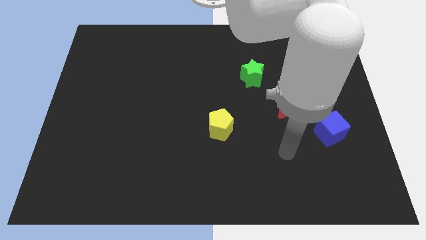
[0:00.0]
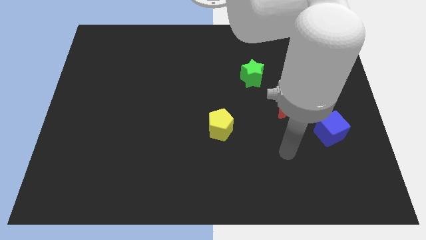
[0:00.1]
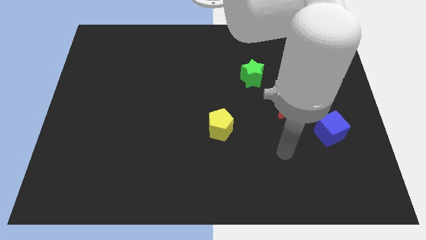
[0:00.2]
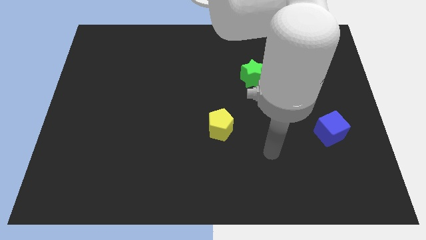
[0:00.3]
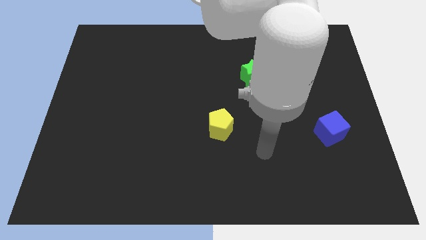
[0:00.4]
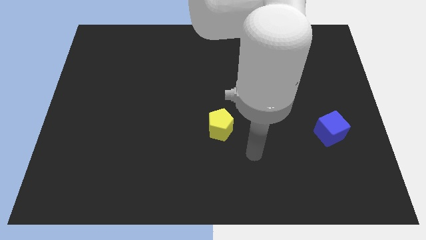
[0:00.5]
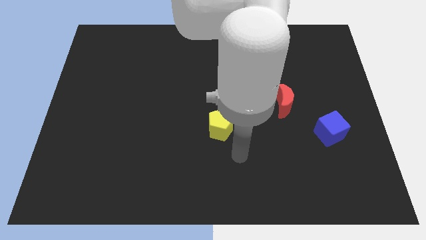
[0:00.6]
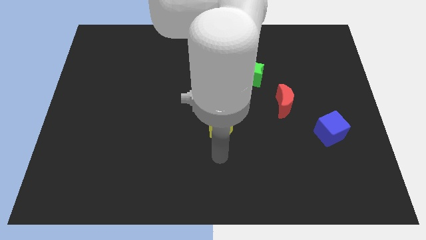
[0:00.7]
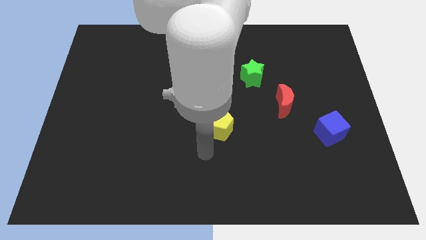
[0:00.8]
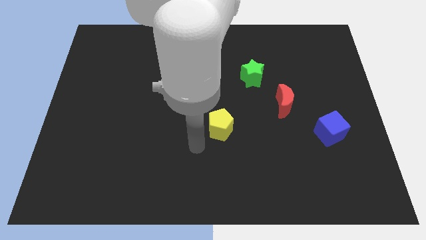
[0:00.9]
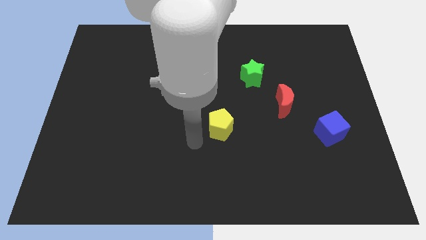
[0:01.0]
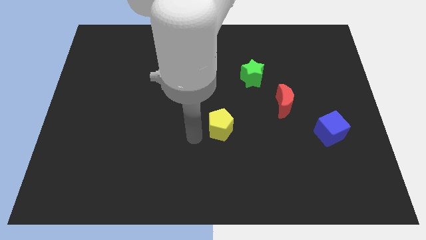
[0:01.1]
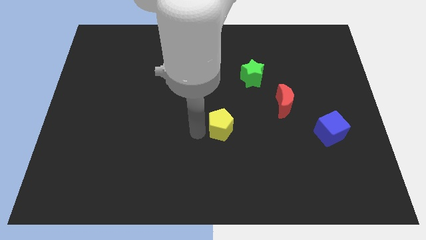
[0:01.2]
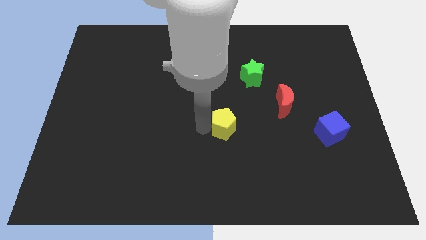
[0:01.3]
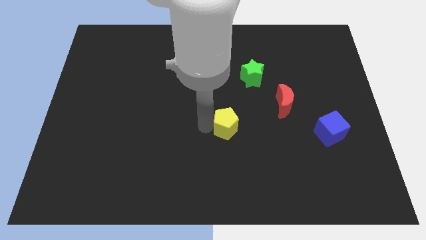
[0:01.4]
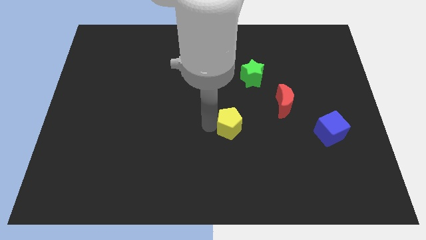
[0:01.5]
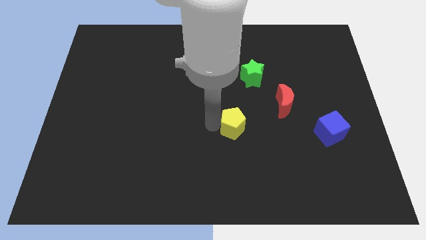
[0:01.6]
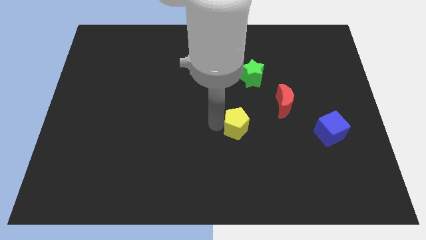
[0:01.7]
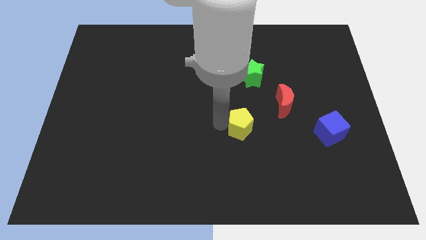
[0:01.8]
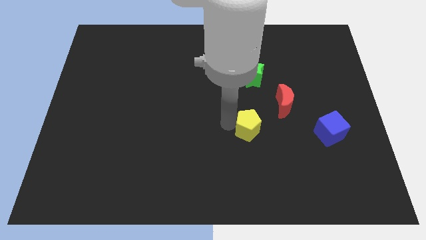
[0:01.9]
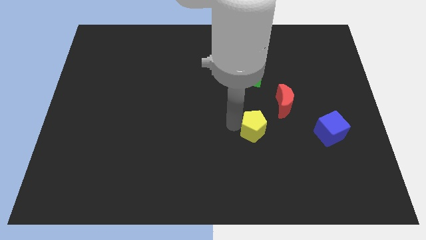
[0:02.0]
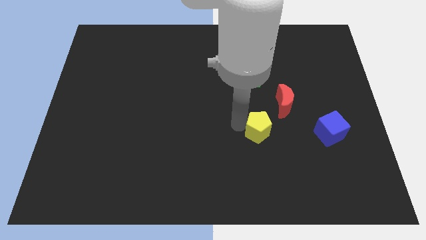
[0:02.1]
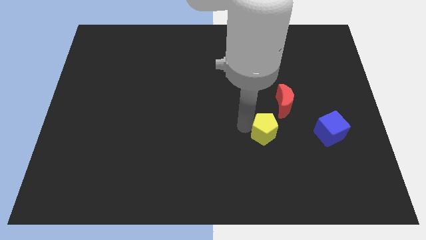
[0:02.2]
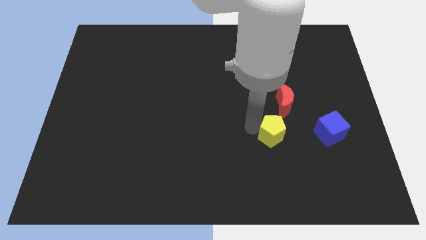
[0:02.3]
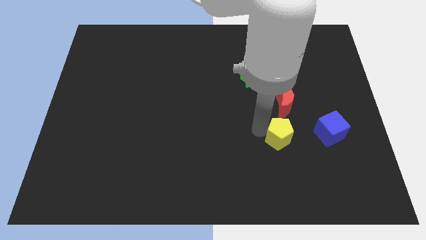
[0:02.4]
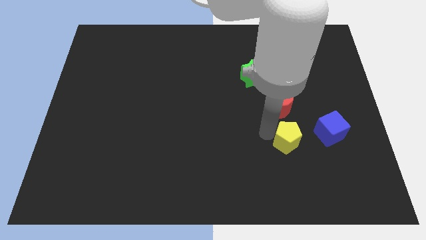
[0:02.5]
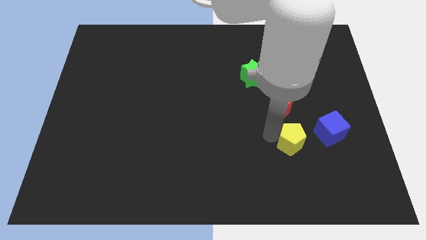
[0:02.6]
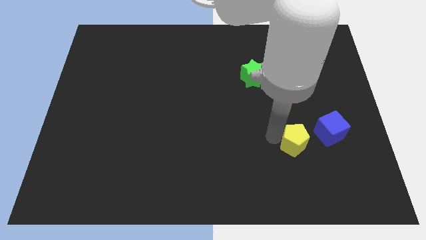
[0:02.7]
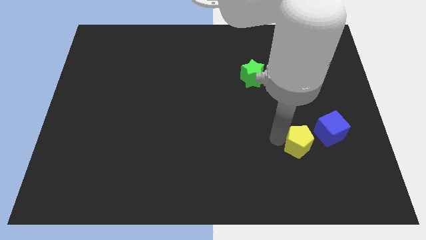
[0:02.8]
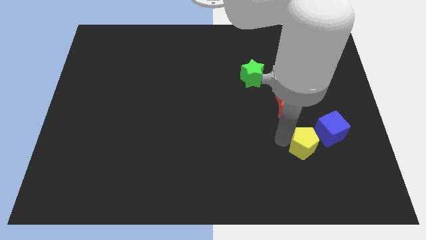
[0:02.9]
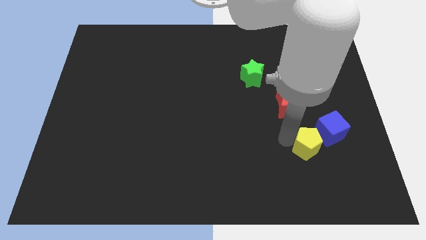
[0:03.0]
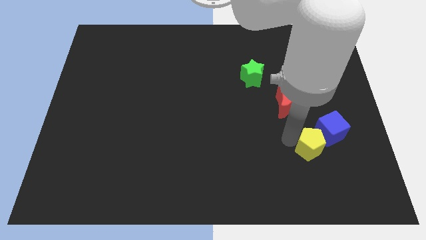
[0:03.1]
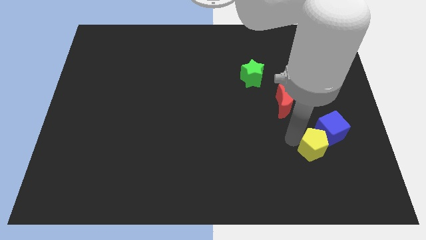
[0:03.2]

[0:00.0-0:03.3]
move the pentagon to the blue cube

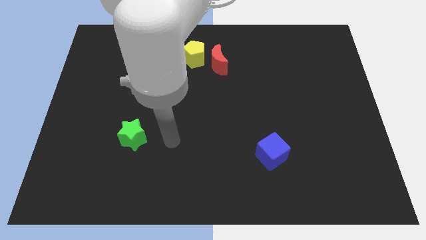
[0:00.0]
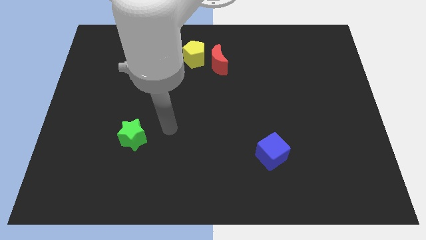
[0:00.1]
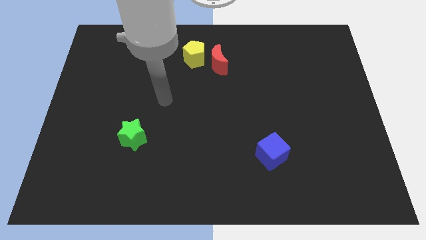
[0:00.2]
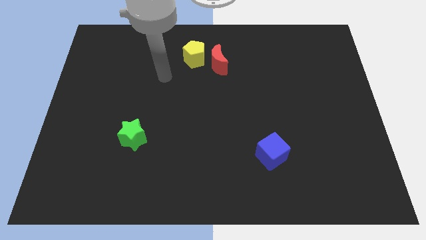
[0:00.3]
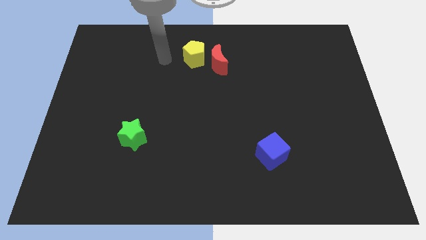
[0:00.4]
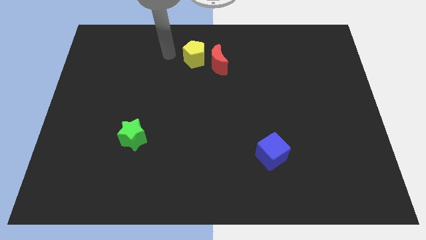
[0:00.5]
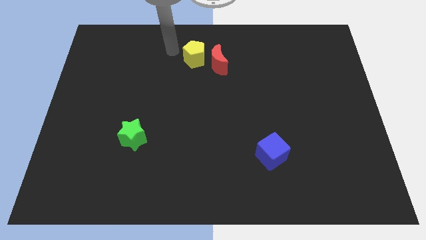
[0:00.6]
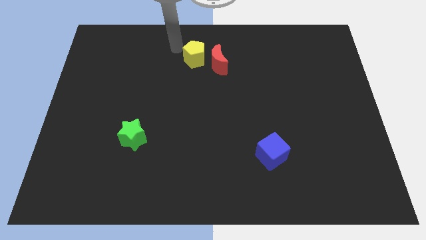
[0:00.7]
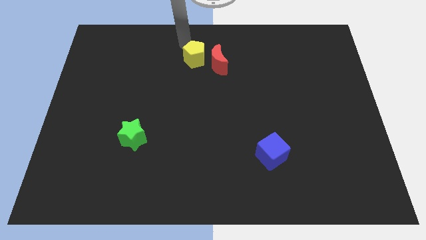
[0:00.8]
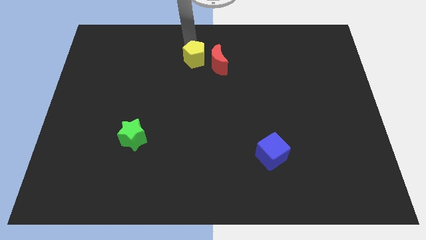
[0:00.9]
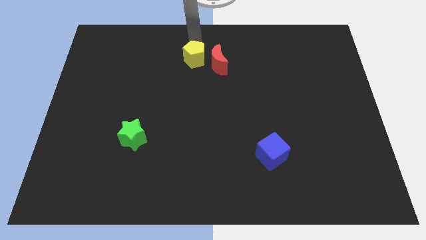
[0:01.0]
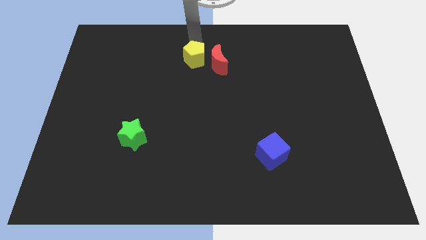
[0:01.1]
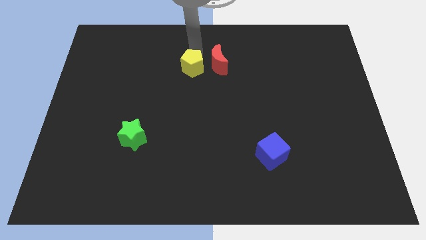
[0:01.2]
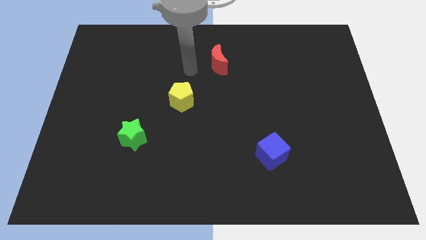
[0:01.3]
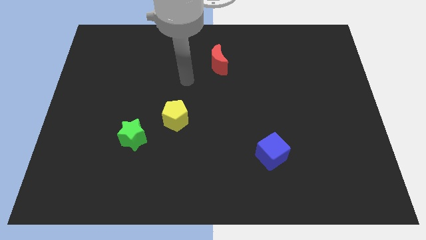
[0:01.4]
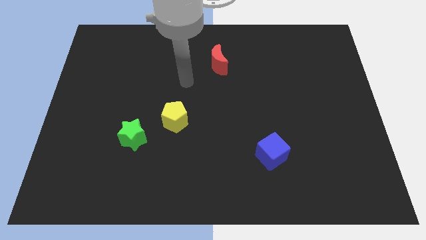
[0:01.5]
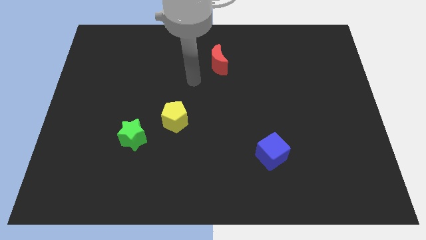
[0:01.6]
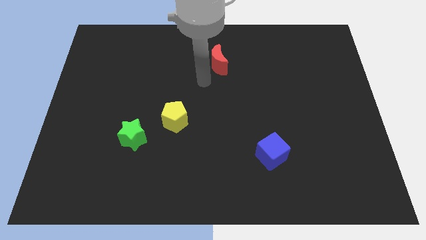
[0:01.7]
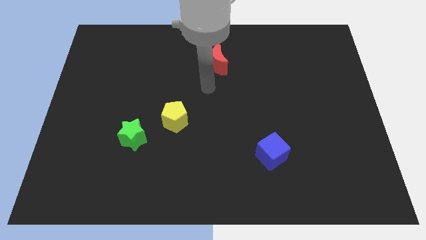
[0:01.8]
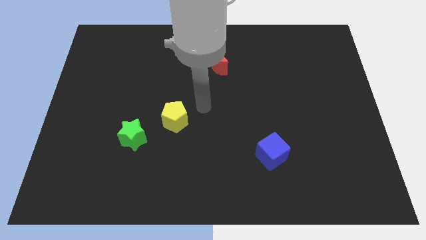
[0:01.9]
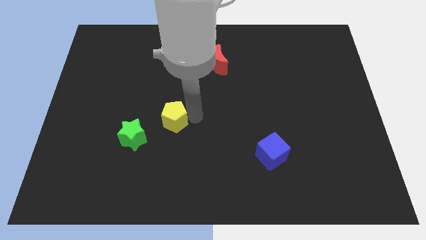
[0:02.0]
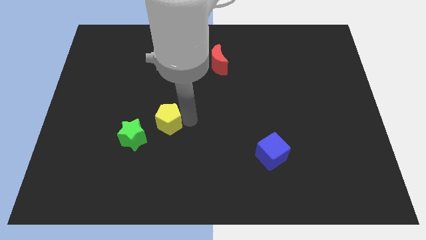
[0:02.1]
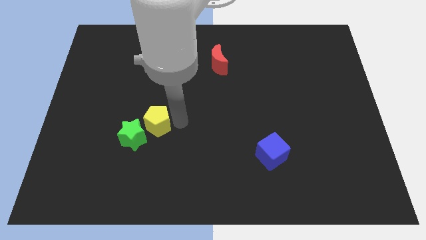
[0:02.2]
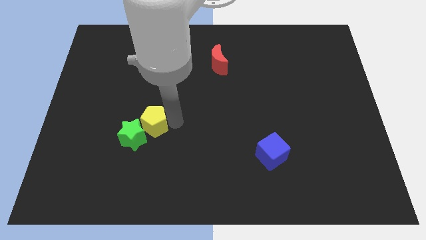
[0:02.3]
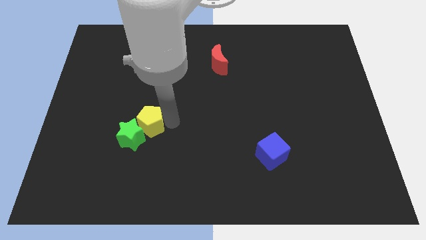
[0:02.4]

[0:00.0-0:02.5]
move the yellow pentagon to the green star

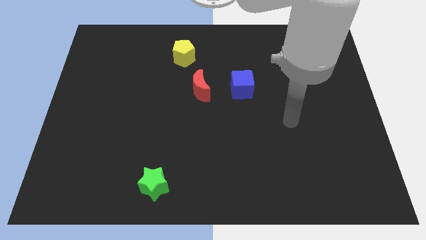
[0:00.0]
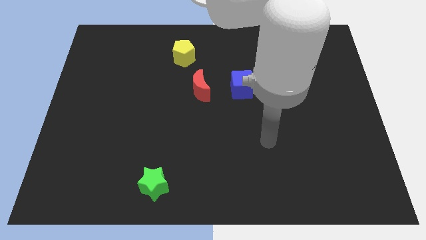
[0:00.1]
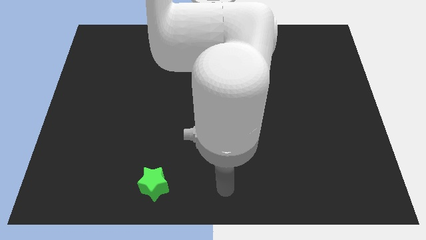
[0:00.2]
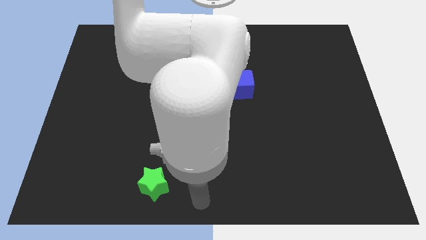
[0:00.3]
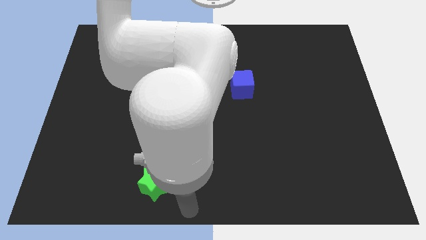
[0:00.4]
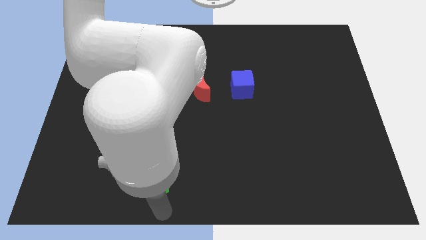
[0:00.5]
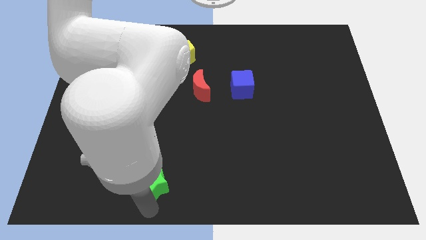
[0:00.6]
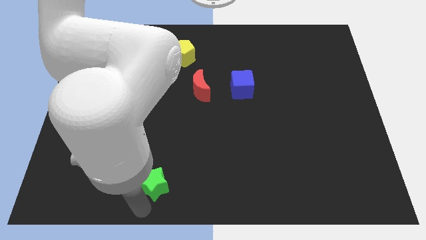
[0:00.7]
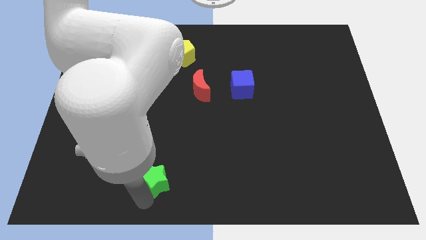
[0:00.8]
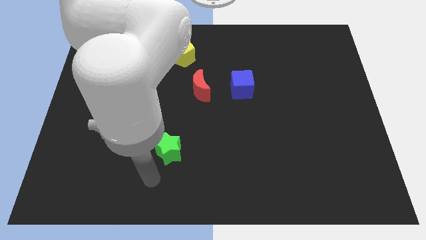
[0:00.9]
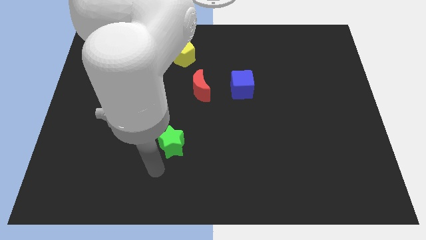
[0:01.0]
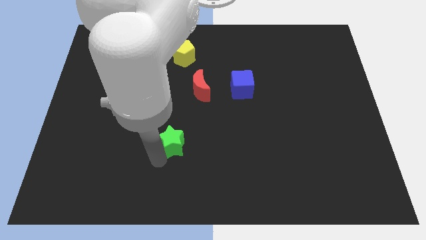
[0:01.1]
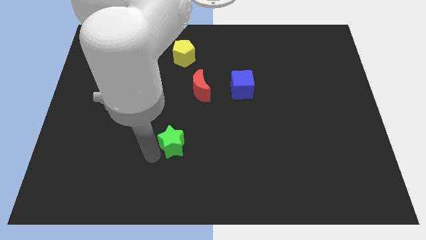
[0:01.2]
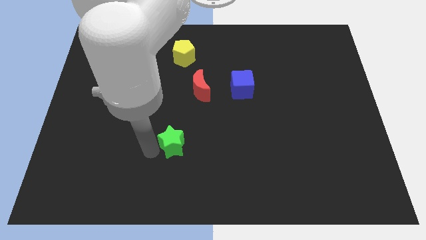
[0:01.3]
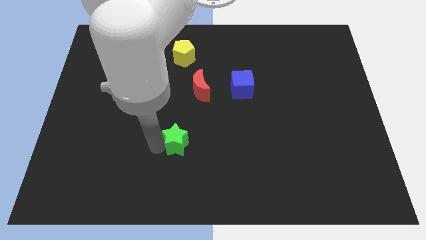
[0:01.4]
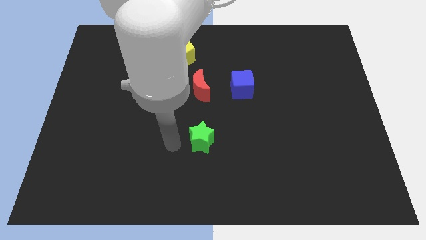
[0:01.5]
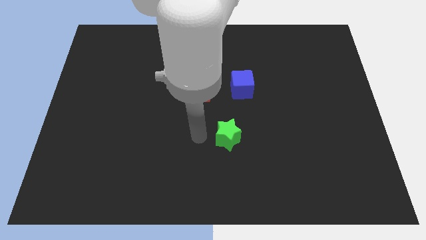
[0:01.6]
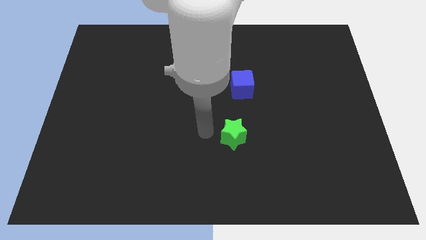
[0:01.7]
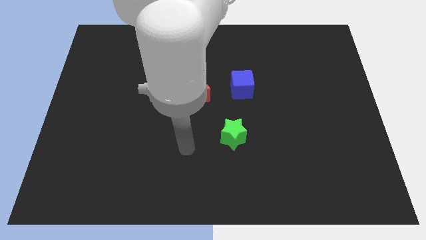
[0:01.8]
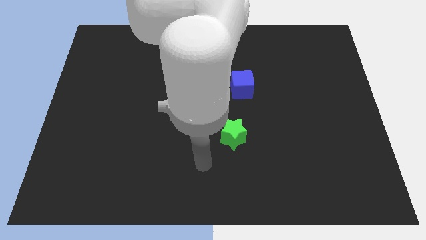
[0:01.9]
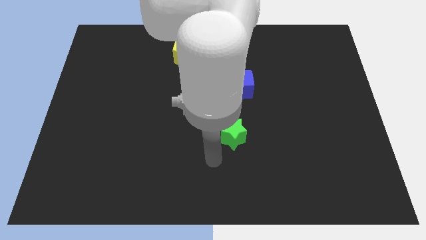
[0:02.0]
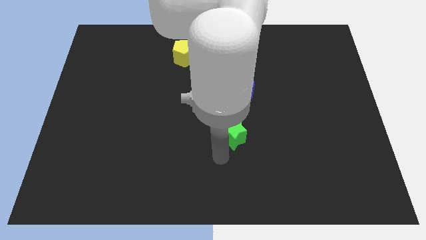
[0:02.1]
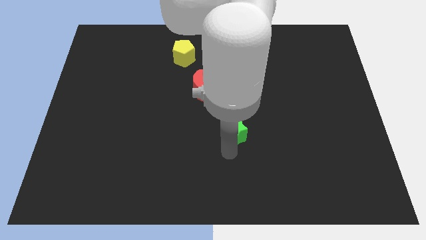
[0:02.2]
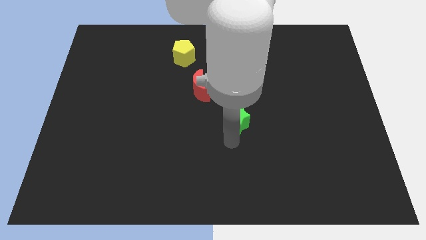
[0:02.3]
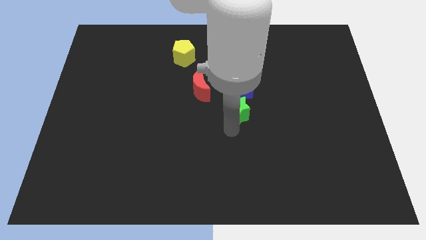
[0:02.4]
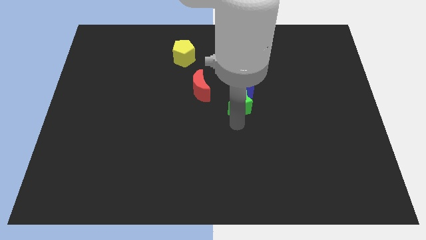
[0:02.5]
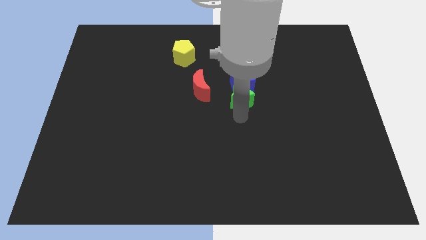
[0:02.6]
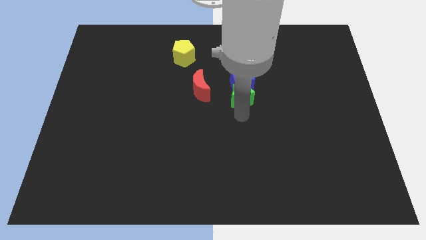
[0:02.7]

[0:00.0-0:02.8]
put the green star towards the blue block

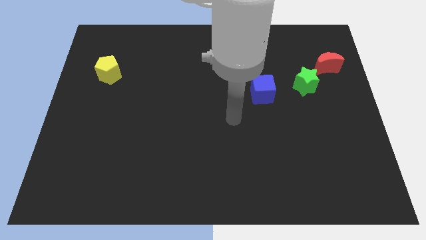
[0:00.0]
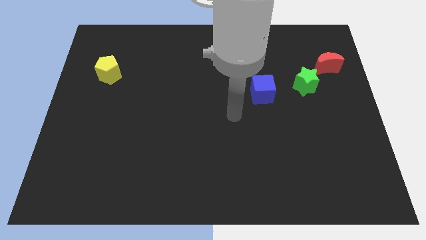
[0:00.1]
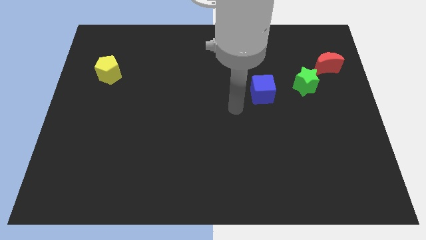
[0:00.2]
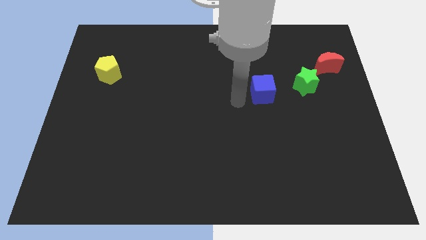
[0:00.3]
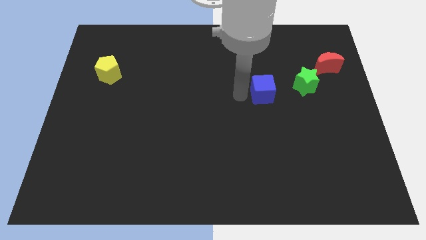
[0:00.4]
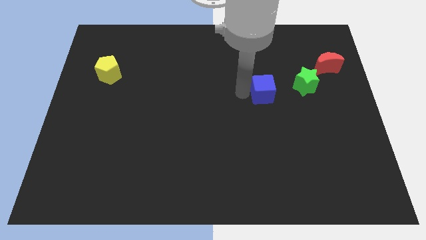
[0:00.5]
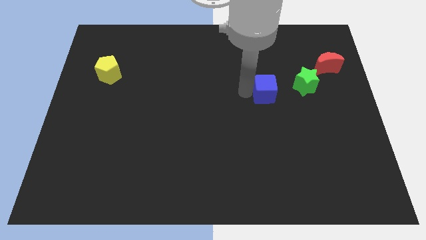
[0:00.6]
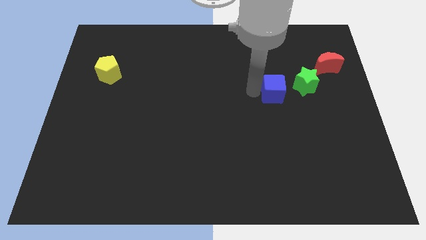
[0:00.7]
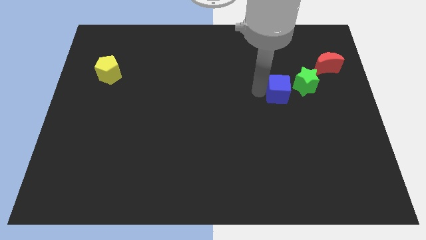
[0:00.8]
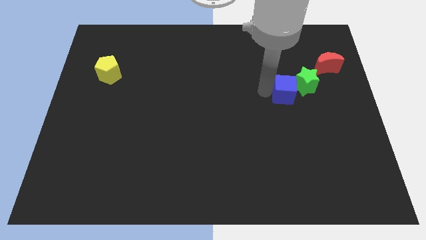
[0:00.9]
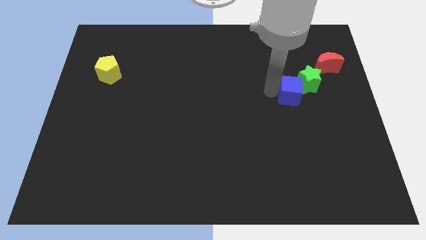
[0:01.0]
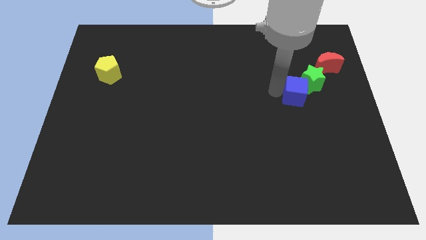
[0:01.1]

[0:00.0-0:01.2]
put the blue block close to the star
